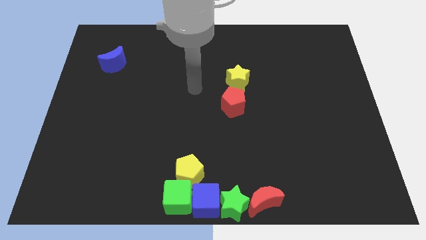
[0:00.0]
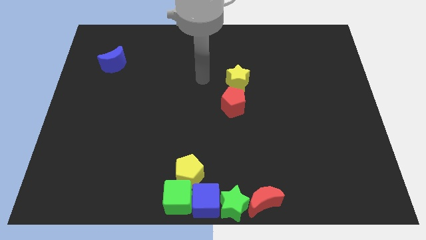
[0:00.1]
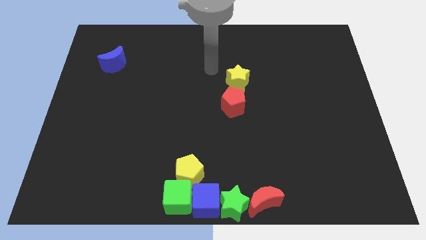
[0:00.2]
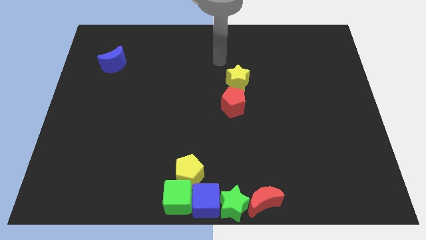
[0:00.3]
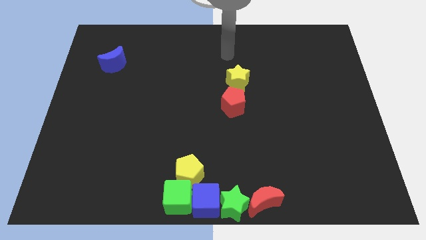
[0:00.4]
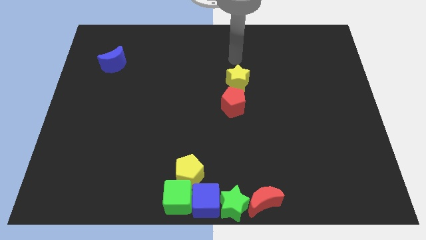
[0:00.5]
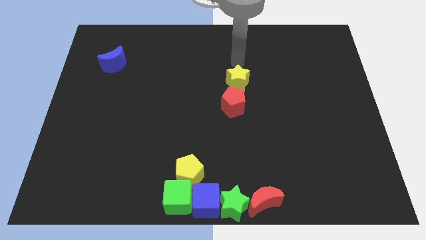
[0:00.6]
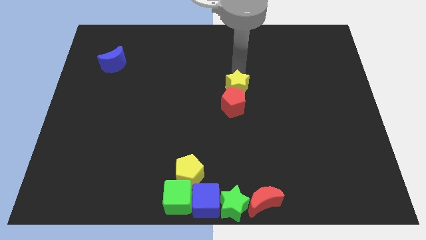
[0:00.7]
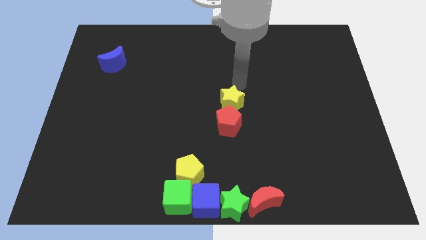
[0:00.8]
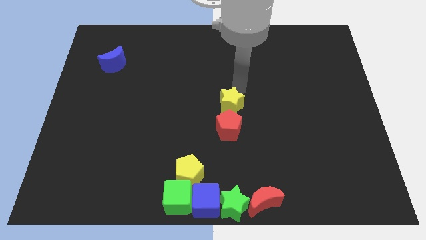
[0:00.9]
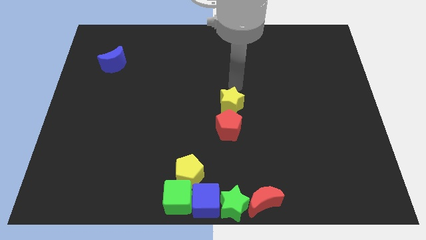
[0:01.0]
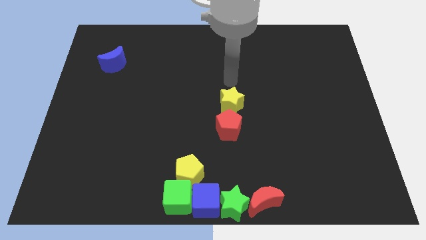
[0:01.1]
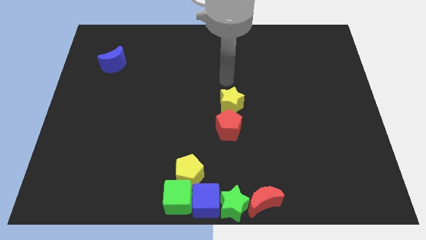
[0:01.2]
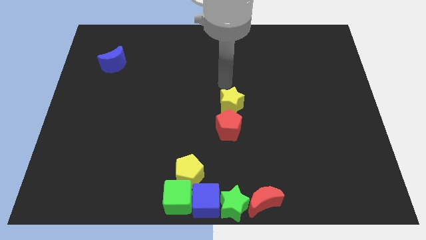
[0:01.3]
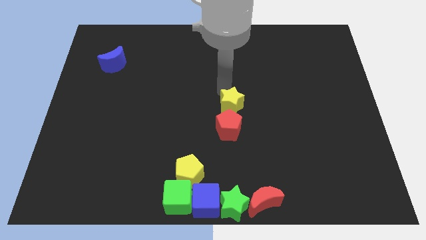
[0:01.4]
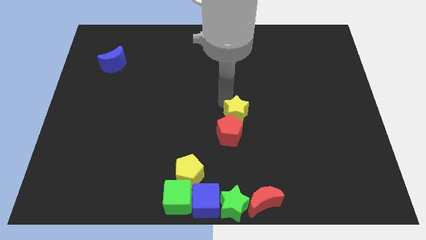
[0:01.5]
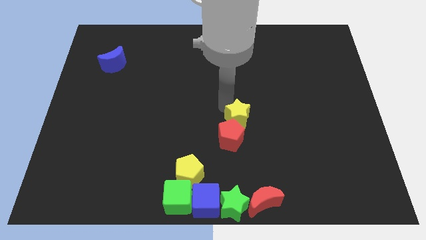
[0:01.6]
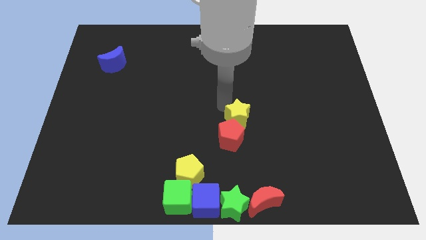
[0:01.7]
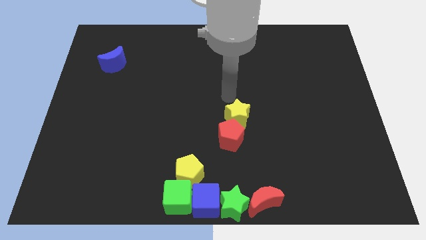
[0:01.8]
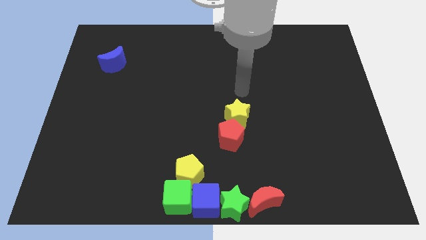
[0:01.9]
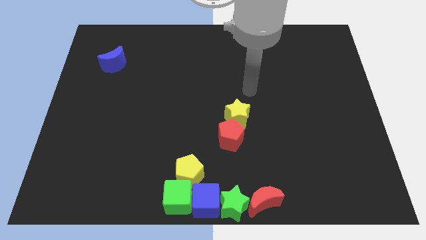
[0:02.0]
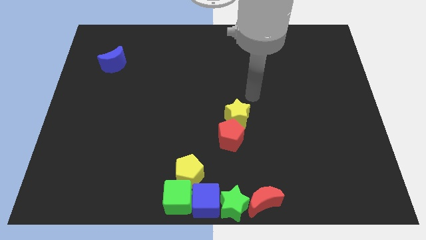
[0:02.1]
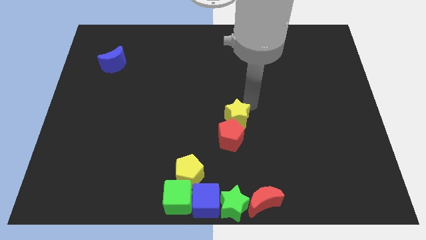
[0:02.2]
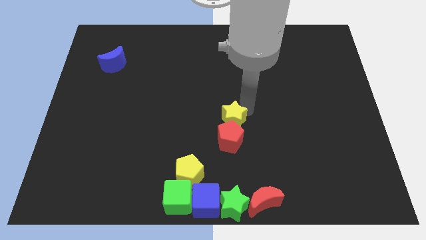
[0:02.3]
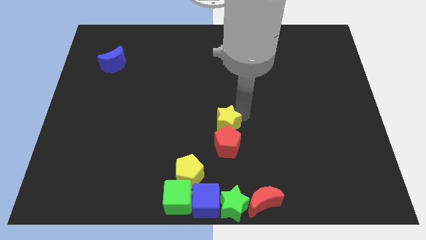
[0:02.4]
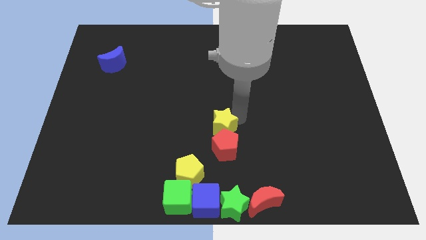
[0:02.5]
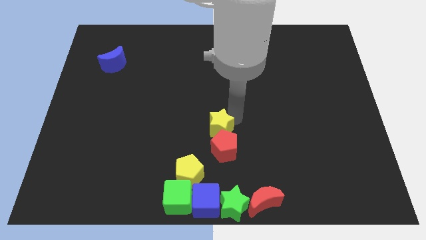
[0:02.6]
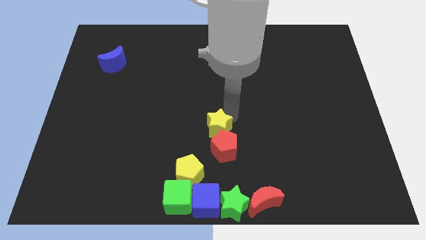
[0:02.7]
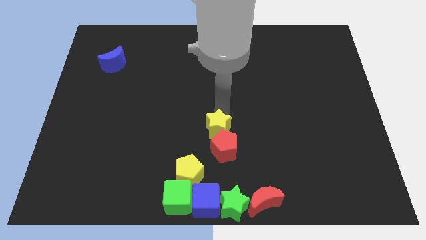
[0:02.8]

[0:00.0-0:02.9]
push yellow star and red pentagon towards bottom of the board

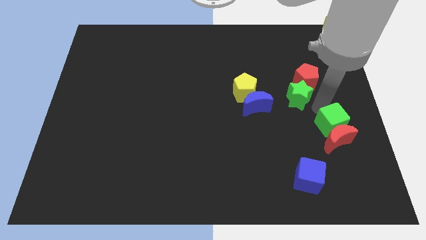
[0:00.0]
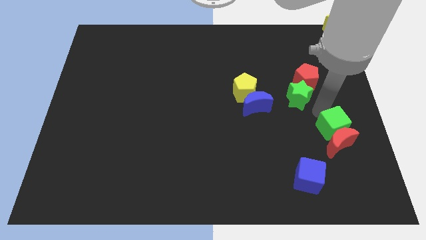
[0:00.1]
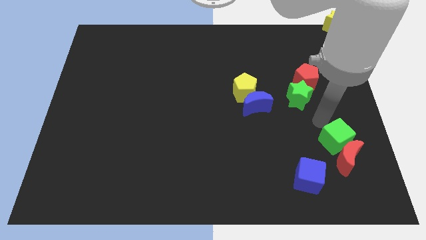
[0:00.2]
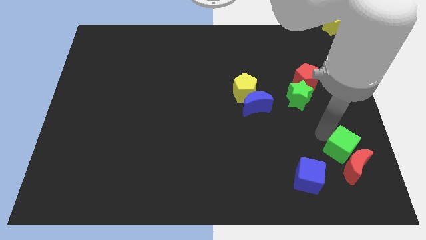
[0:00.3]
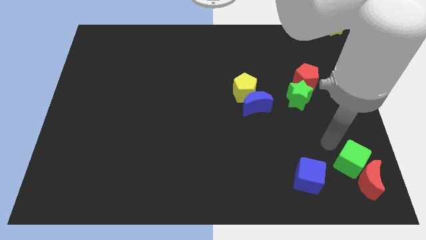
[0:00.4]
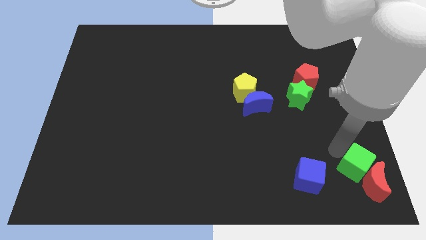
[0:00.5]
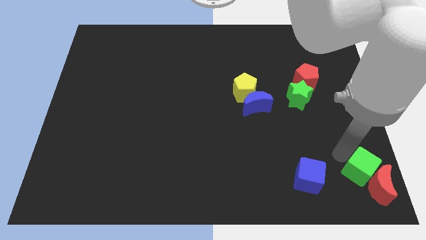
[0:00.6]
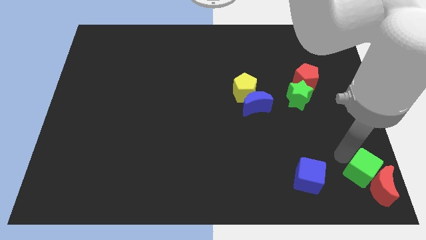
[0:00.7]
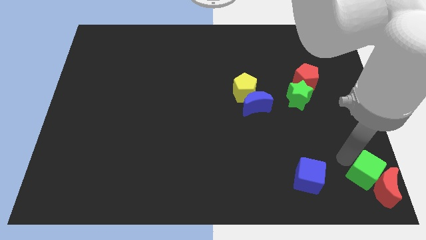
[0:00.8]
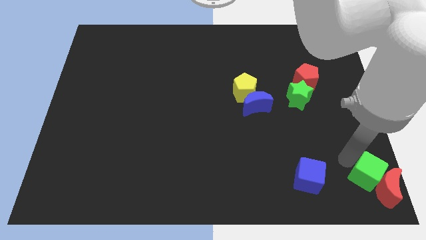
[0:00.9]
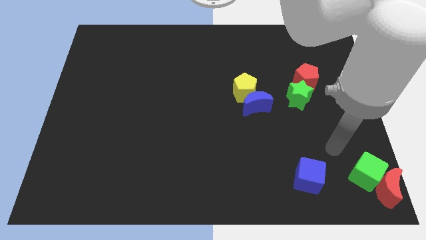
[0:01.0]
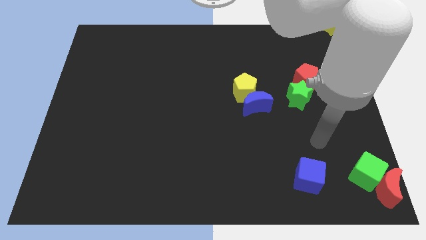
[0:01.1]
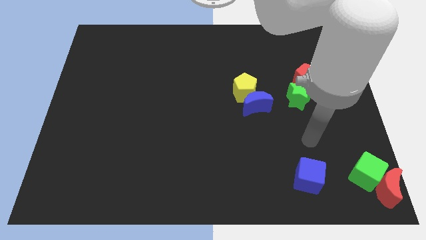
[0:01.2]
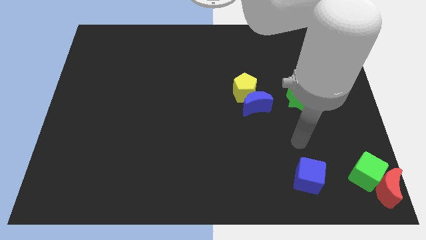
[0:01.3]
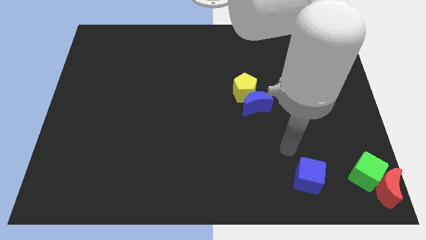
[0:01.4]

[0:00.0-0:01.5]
move the green cube towards the bottom right corner of the board

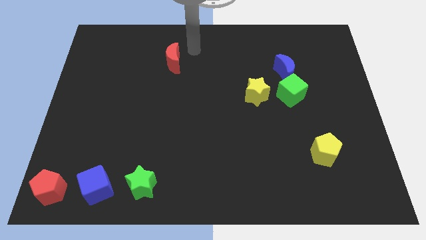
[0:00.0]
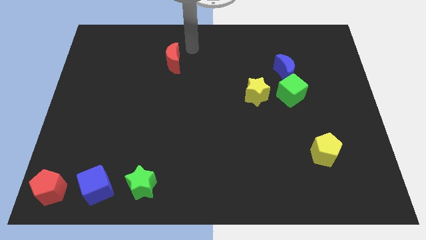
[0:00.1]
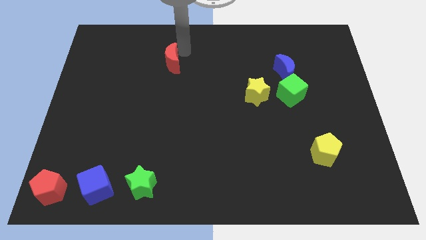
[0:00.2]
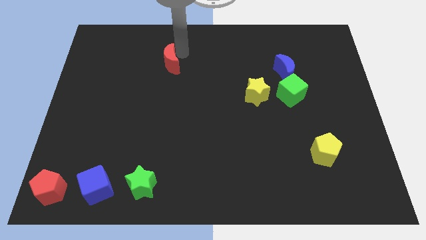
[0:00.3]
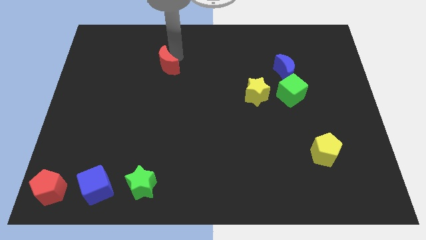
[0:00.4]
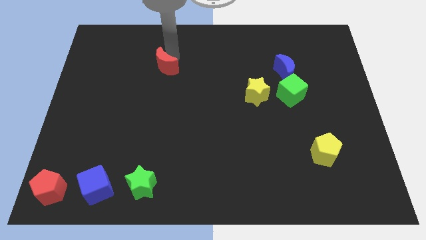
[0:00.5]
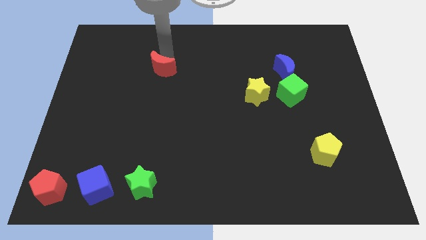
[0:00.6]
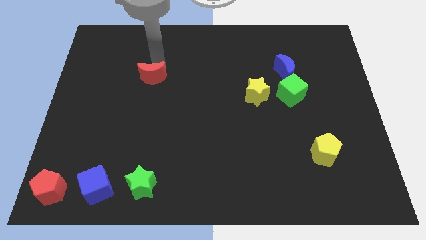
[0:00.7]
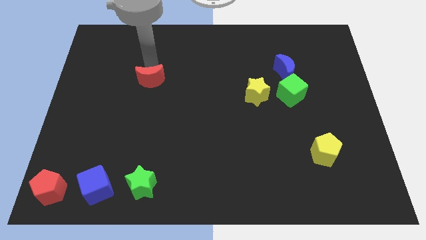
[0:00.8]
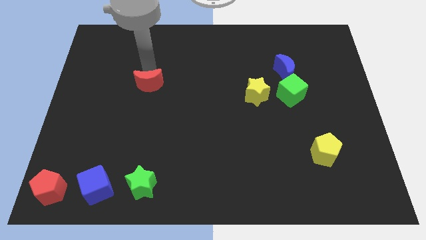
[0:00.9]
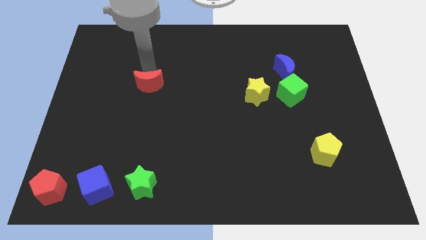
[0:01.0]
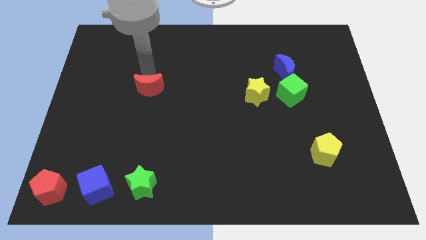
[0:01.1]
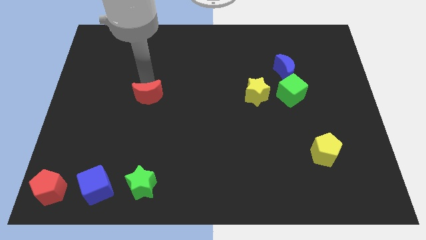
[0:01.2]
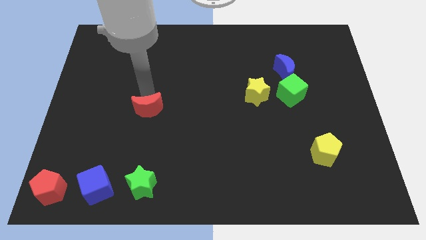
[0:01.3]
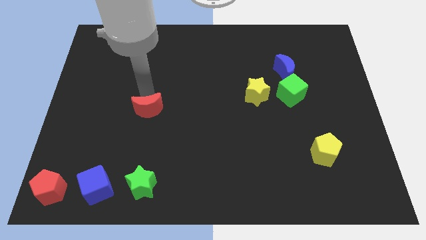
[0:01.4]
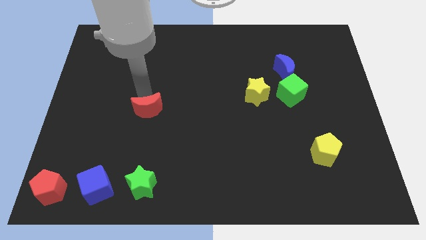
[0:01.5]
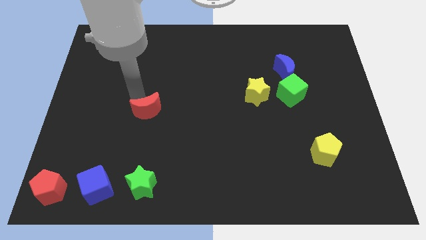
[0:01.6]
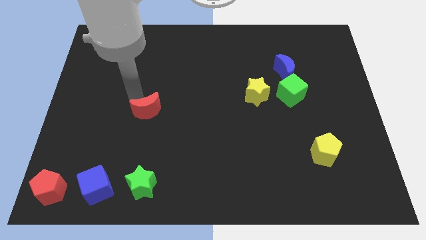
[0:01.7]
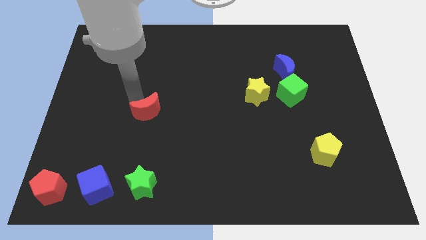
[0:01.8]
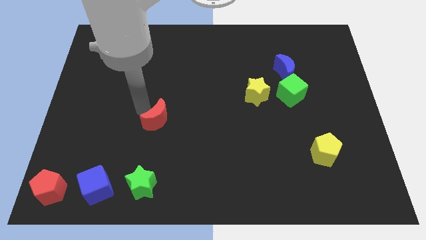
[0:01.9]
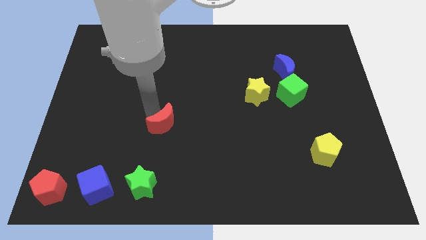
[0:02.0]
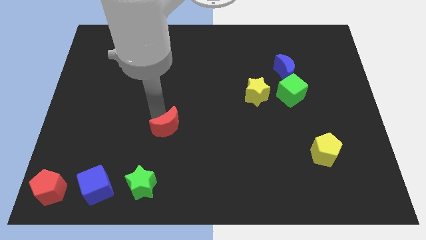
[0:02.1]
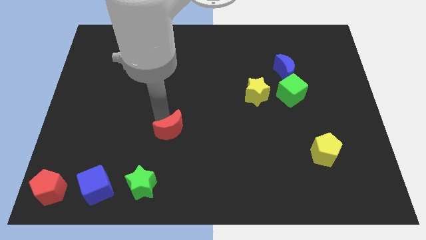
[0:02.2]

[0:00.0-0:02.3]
push red crescent to the top right of green star

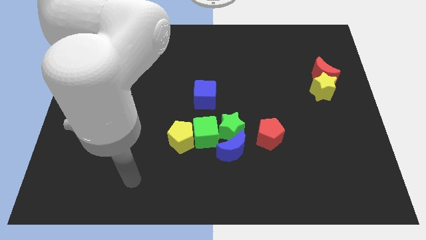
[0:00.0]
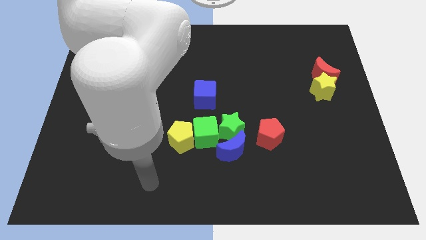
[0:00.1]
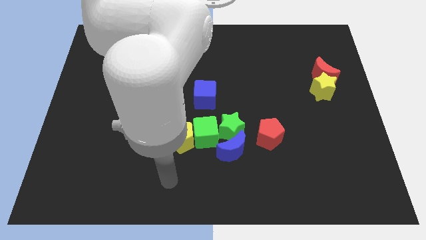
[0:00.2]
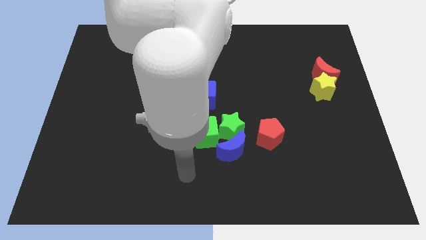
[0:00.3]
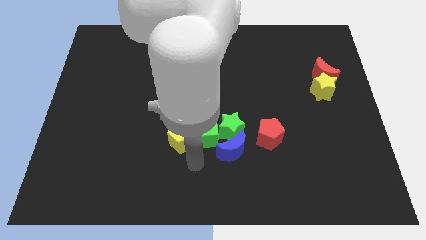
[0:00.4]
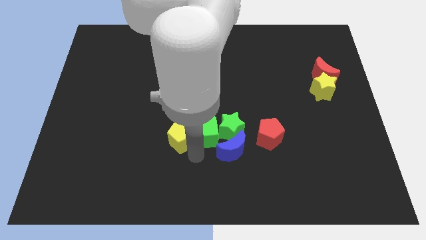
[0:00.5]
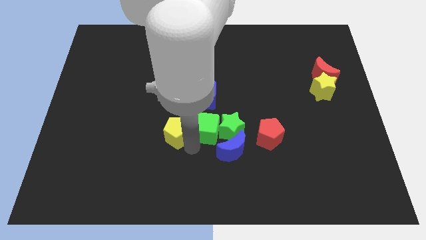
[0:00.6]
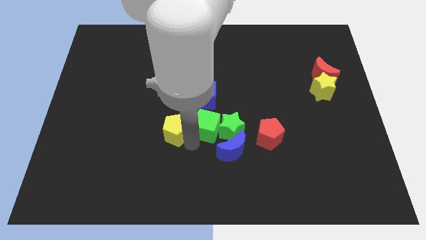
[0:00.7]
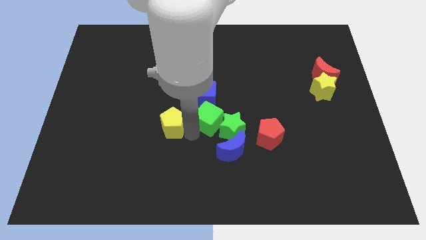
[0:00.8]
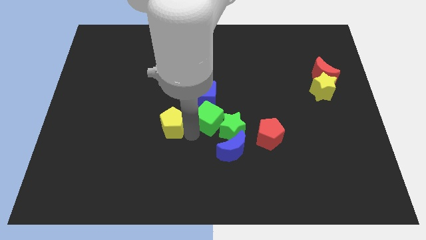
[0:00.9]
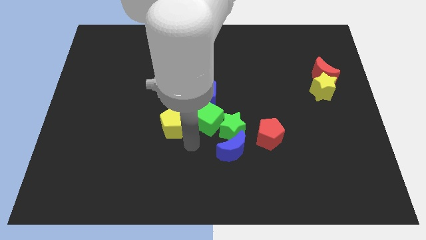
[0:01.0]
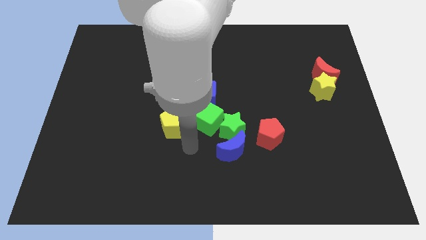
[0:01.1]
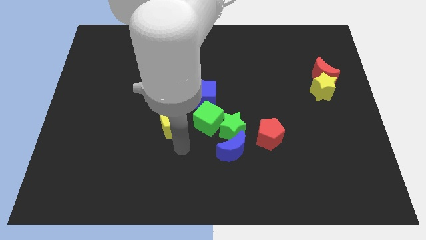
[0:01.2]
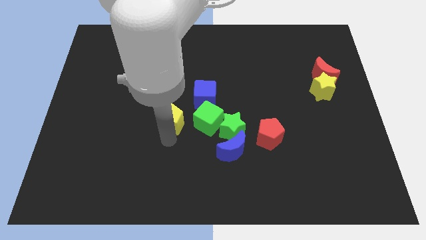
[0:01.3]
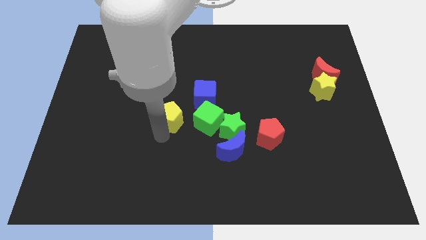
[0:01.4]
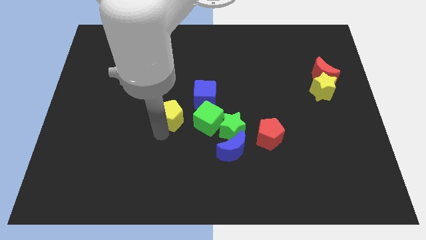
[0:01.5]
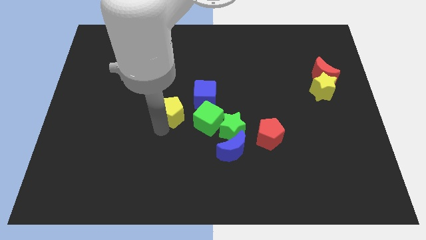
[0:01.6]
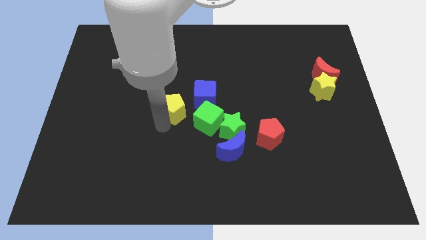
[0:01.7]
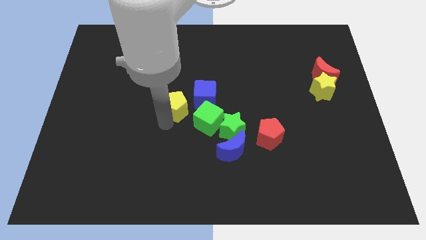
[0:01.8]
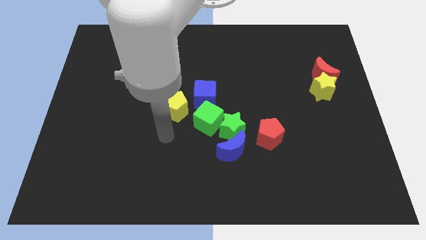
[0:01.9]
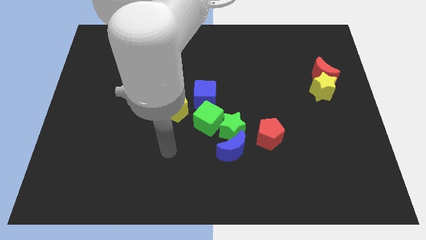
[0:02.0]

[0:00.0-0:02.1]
separate the green cube and yellow pentagon
